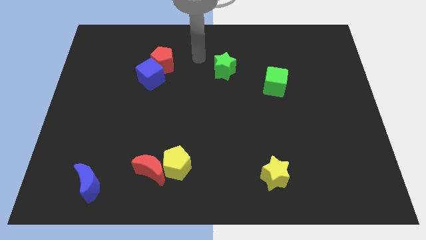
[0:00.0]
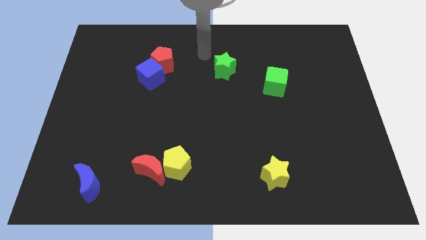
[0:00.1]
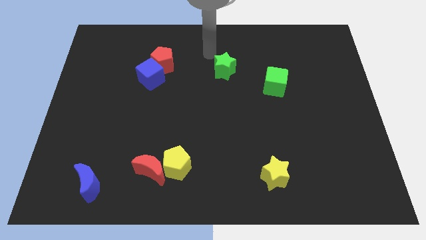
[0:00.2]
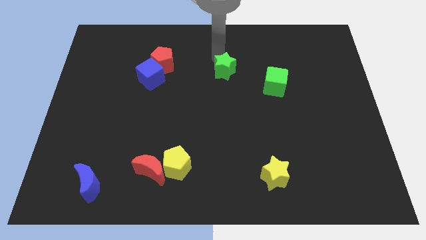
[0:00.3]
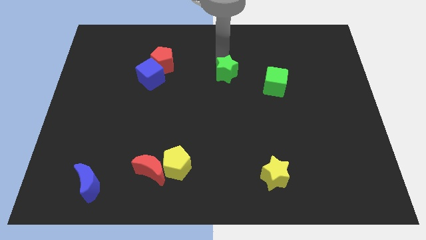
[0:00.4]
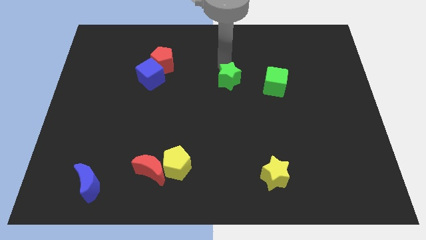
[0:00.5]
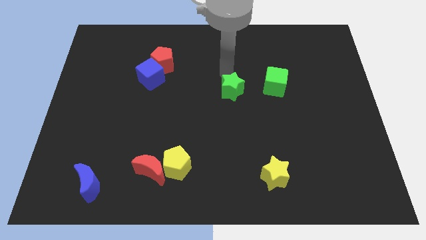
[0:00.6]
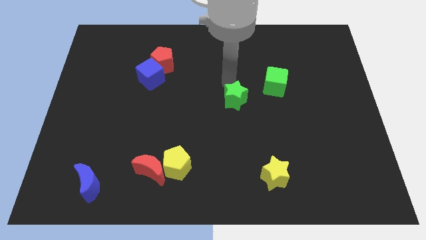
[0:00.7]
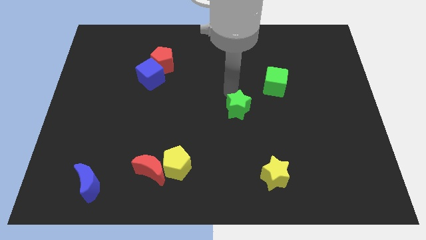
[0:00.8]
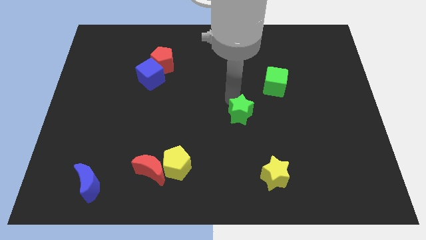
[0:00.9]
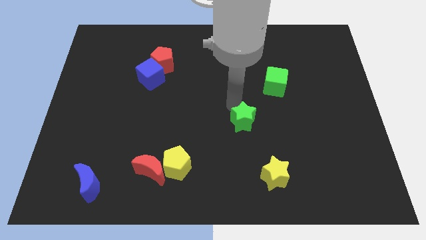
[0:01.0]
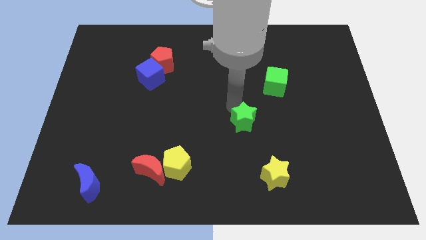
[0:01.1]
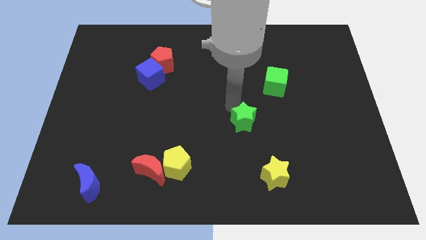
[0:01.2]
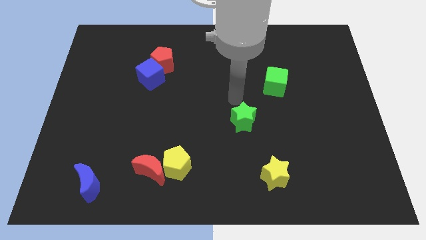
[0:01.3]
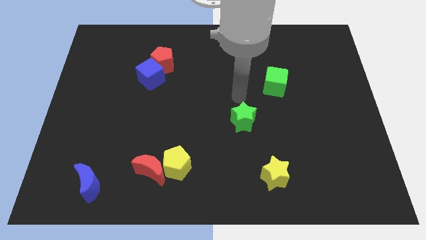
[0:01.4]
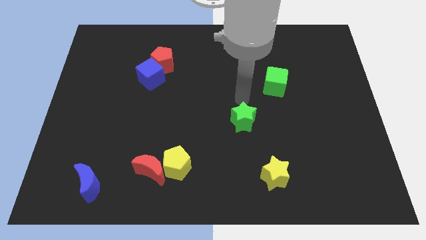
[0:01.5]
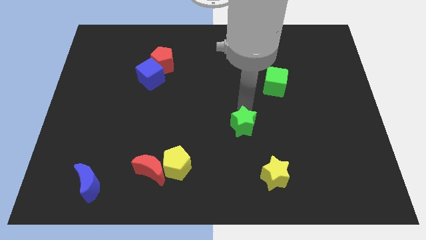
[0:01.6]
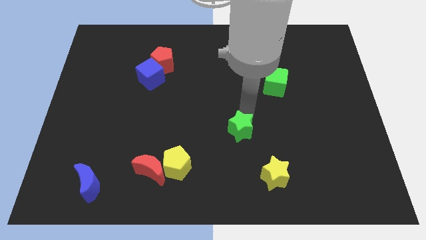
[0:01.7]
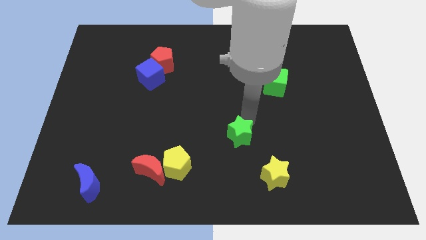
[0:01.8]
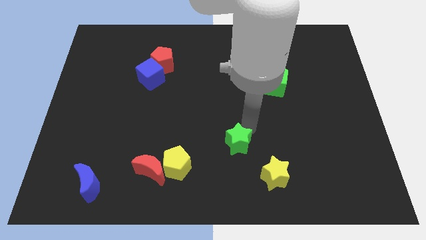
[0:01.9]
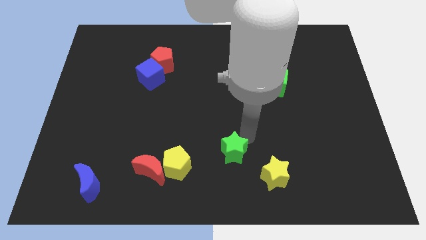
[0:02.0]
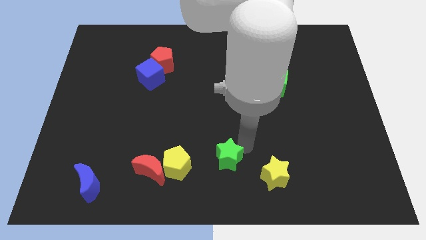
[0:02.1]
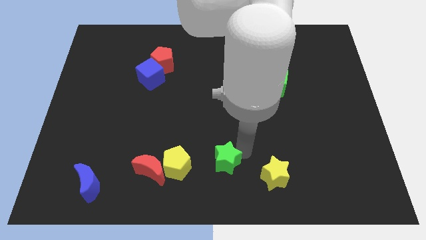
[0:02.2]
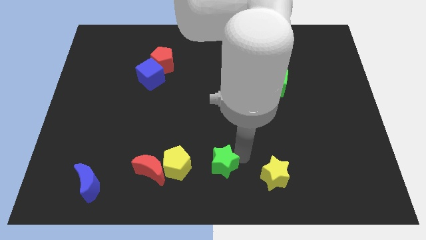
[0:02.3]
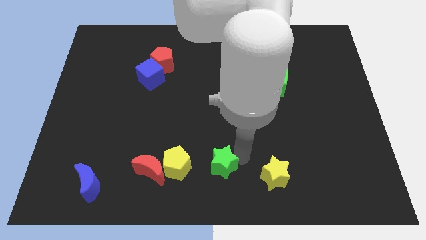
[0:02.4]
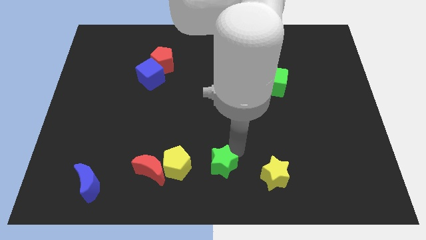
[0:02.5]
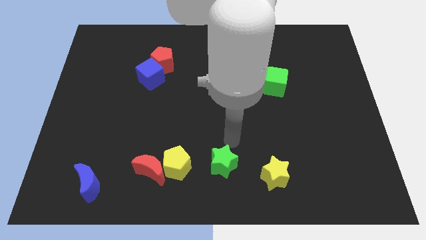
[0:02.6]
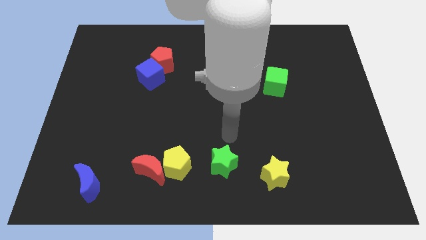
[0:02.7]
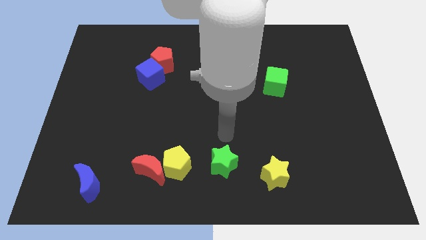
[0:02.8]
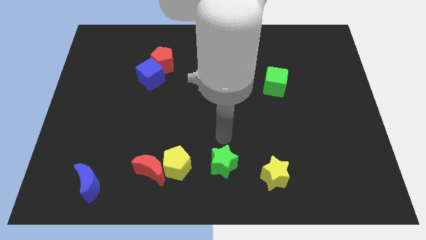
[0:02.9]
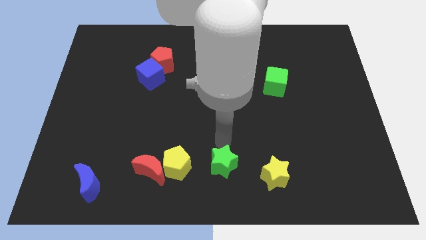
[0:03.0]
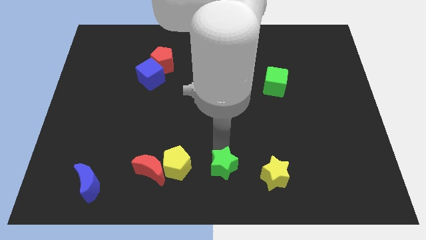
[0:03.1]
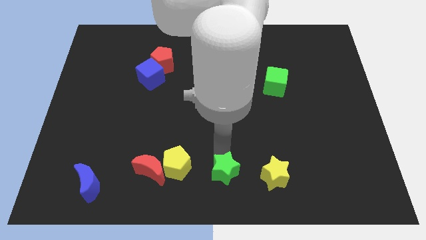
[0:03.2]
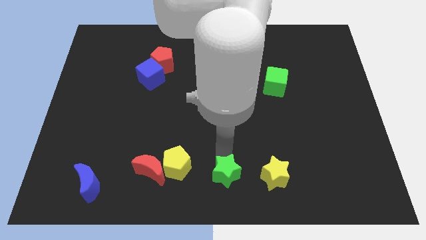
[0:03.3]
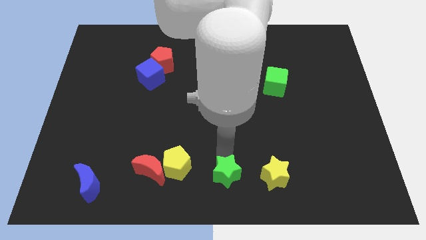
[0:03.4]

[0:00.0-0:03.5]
put the green star in between yellow pentagon and yellow star

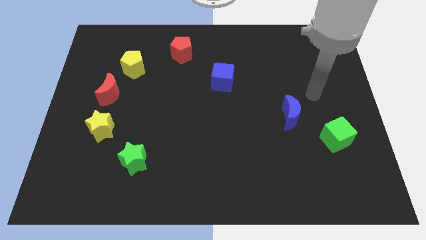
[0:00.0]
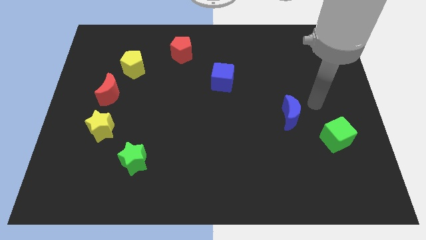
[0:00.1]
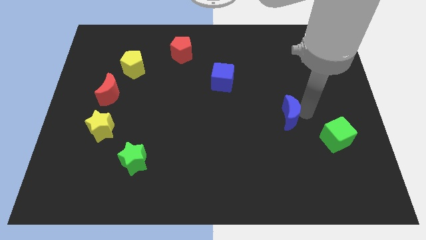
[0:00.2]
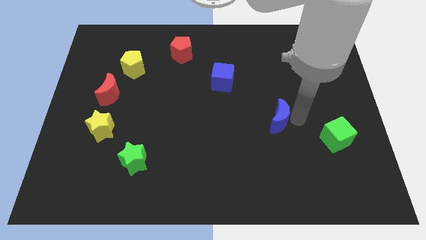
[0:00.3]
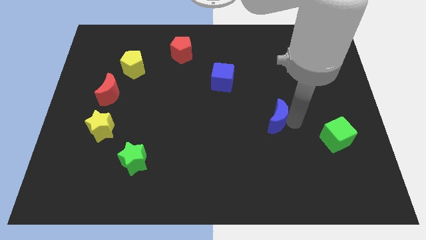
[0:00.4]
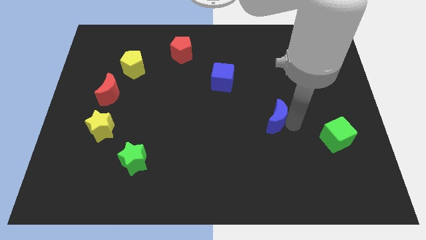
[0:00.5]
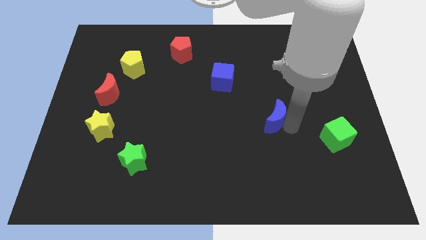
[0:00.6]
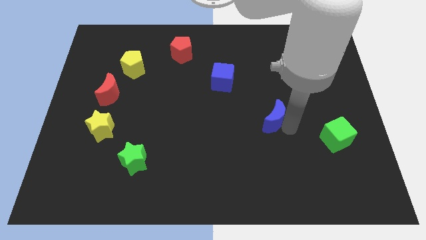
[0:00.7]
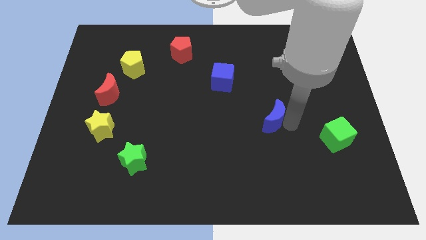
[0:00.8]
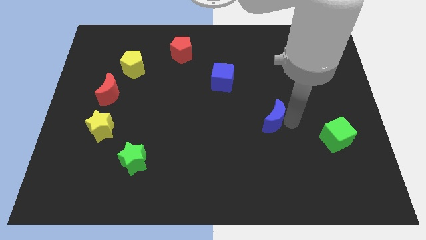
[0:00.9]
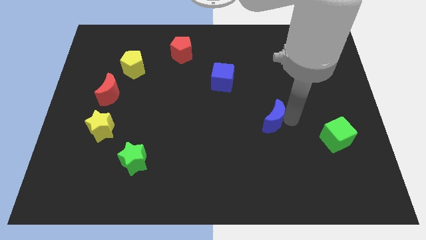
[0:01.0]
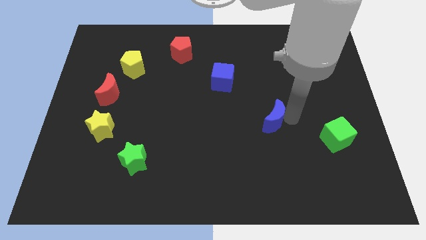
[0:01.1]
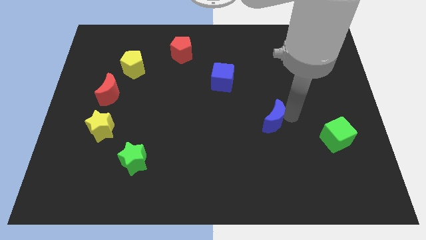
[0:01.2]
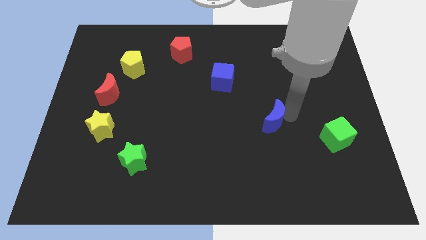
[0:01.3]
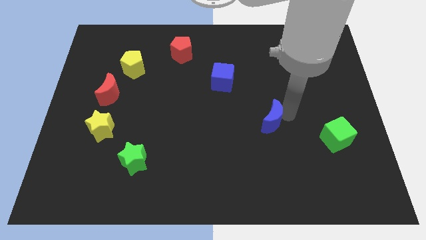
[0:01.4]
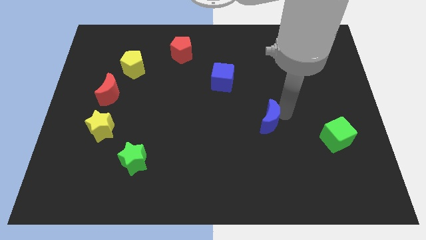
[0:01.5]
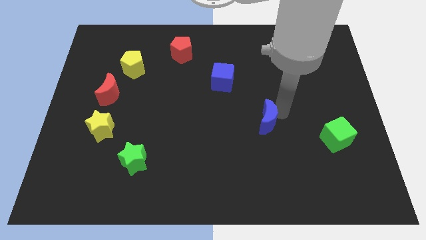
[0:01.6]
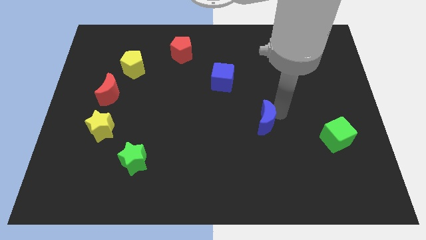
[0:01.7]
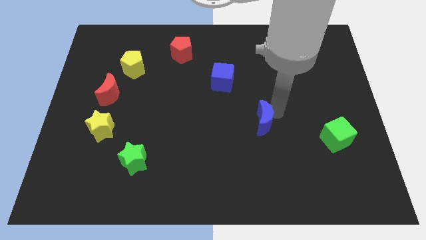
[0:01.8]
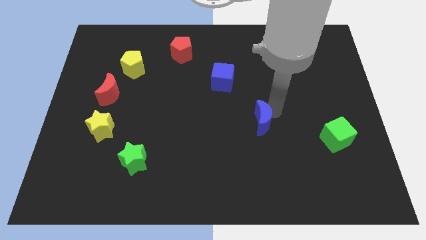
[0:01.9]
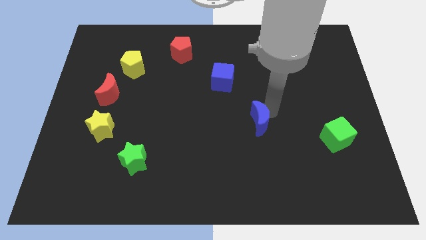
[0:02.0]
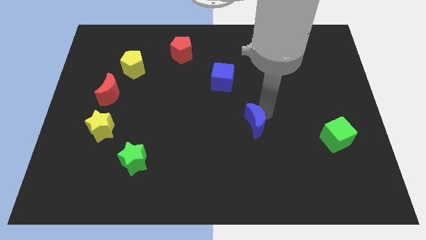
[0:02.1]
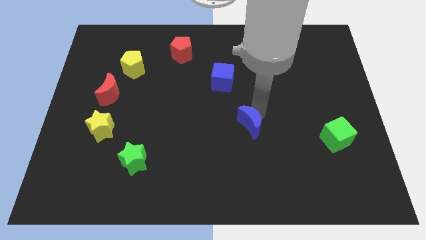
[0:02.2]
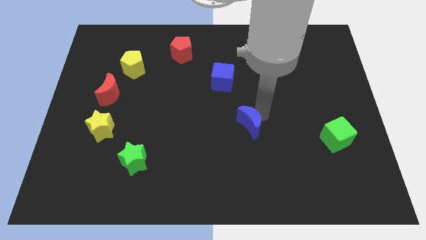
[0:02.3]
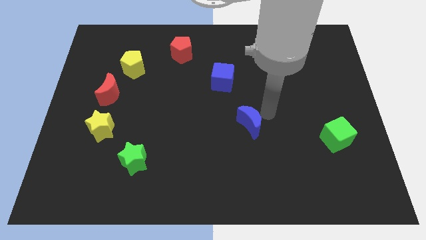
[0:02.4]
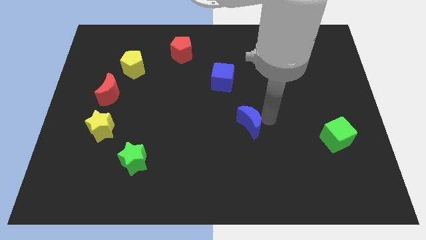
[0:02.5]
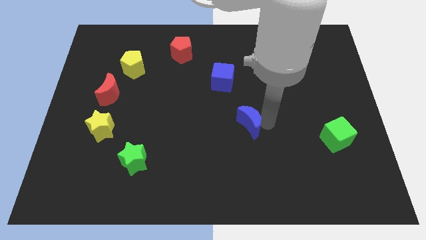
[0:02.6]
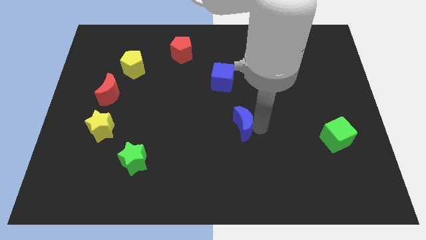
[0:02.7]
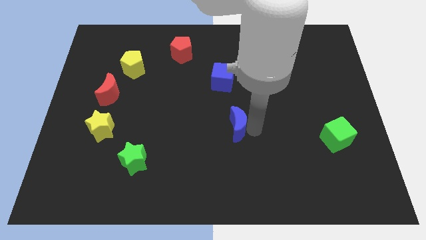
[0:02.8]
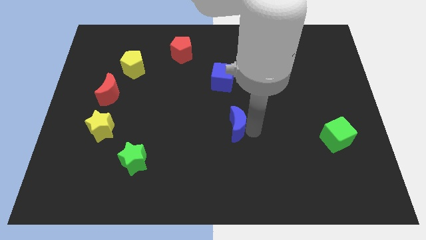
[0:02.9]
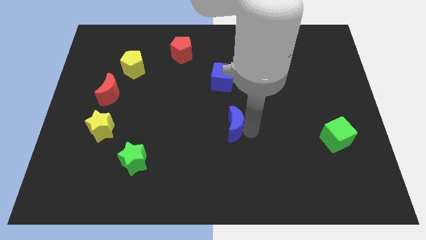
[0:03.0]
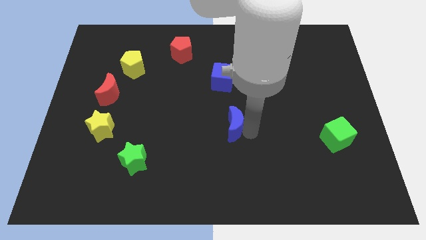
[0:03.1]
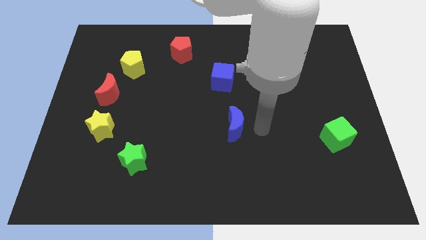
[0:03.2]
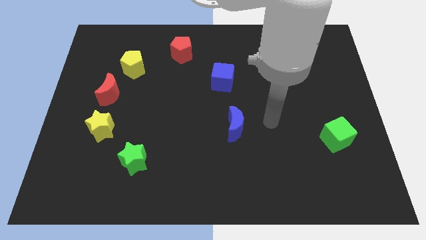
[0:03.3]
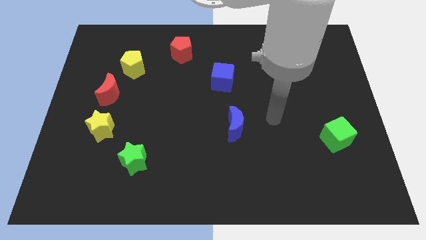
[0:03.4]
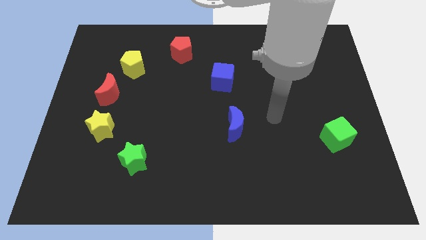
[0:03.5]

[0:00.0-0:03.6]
move the blue moon towards the bottom of the blue cube

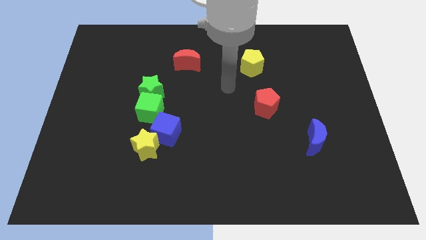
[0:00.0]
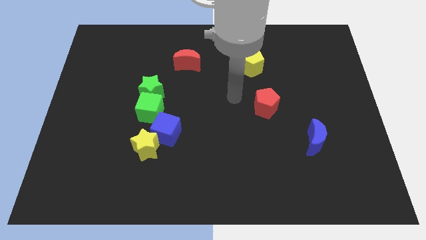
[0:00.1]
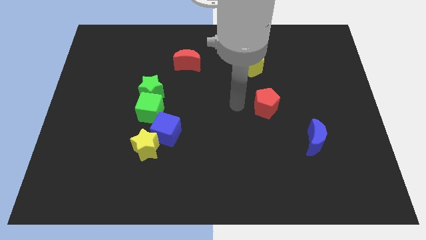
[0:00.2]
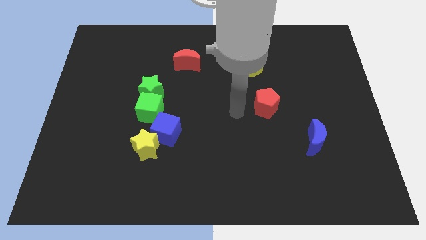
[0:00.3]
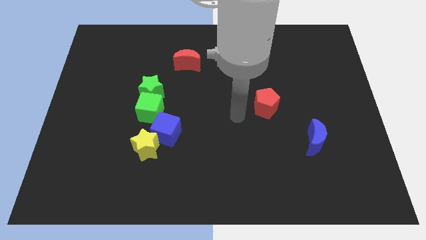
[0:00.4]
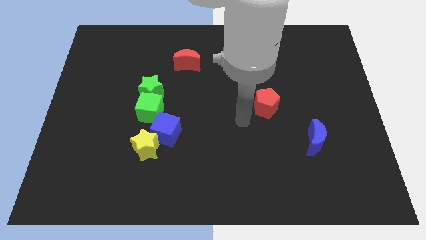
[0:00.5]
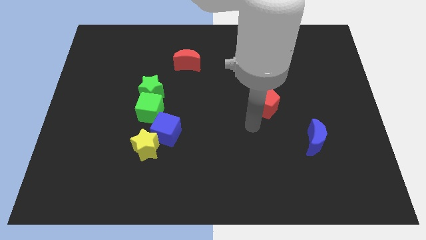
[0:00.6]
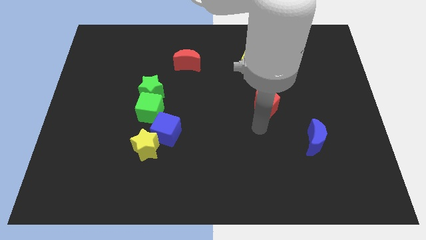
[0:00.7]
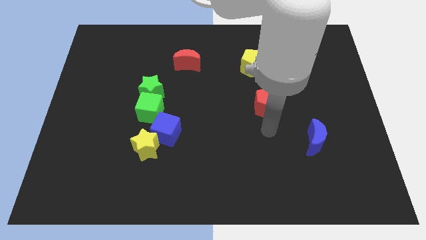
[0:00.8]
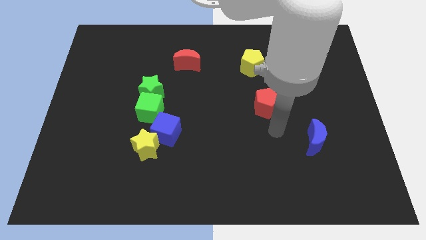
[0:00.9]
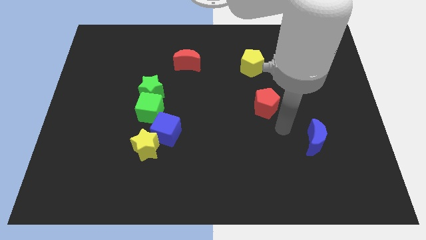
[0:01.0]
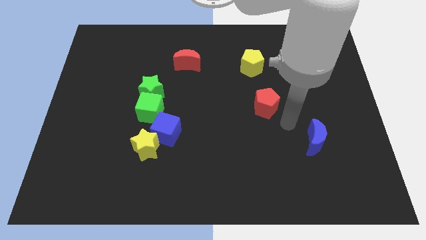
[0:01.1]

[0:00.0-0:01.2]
place your hand between the red pentagon and blue moon

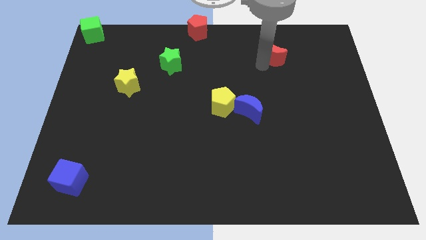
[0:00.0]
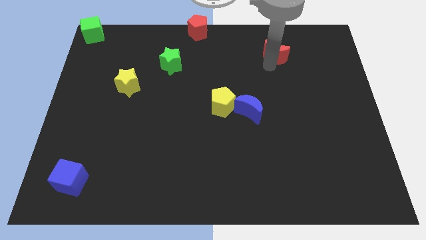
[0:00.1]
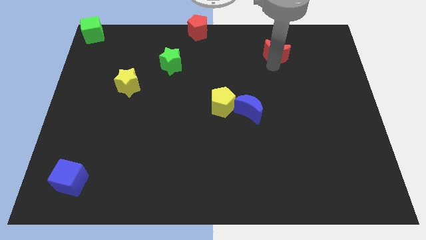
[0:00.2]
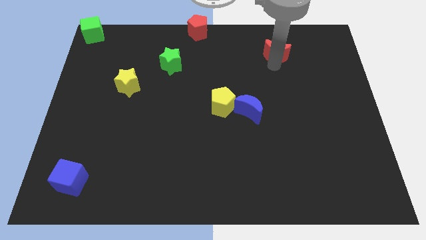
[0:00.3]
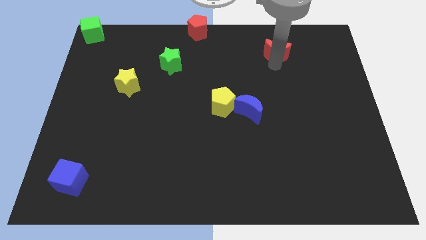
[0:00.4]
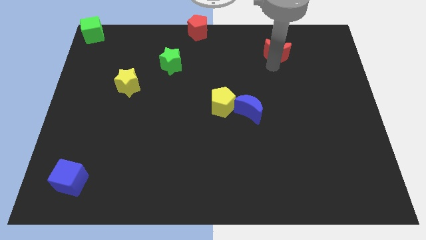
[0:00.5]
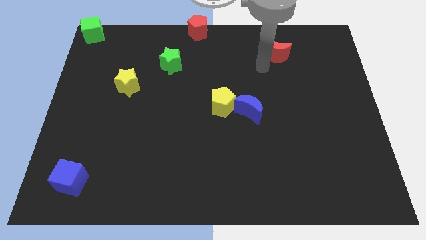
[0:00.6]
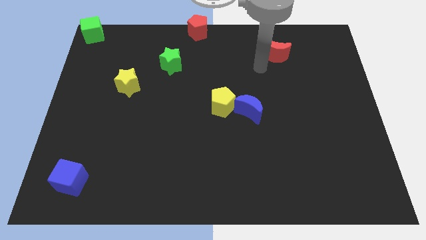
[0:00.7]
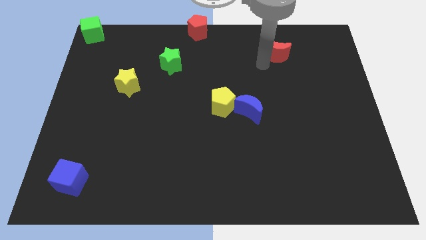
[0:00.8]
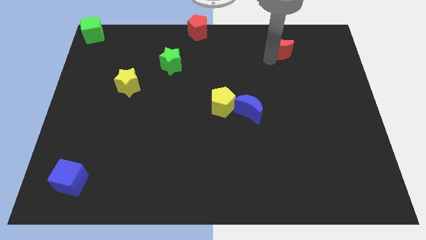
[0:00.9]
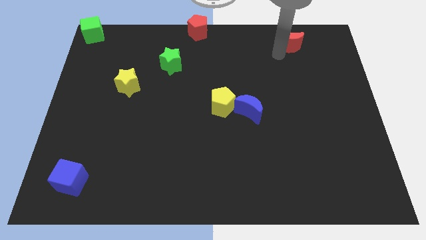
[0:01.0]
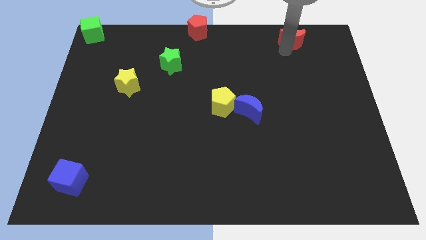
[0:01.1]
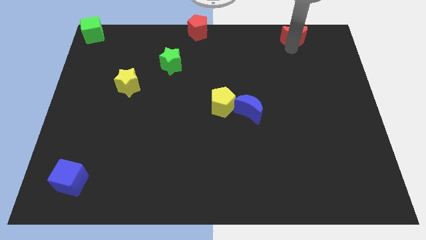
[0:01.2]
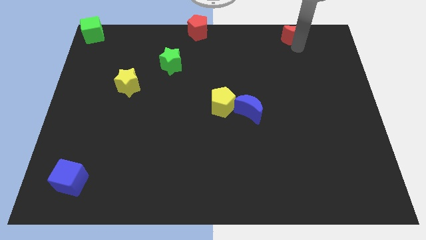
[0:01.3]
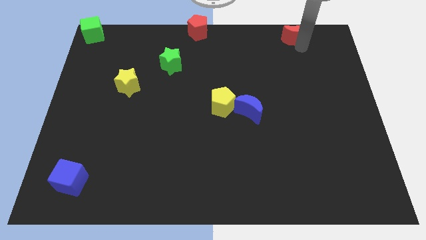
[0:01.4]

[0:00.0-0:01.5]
push the red crescent towards the top right side of the board
